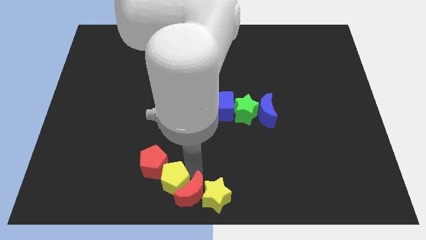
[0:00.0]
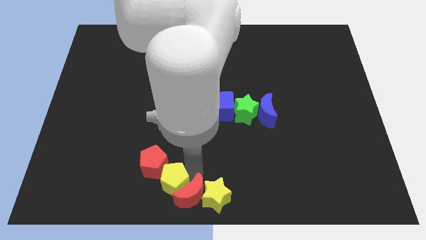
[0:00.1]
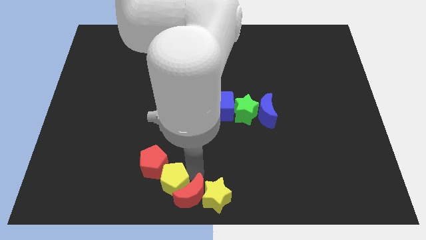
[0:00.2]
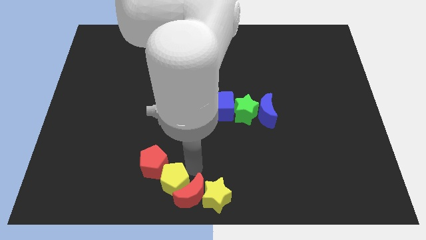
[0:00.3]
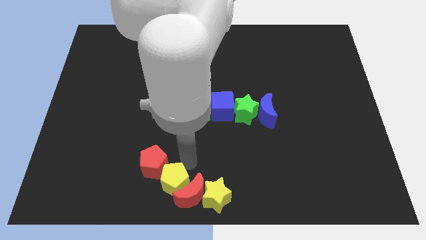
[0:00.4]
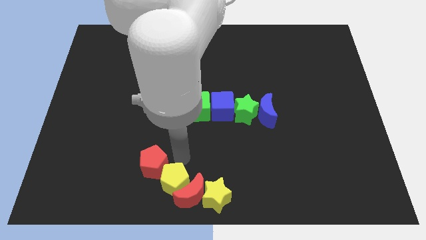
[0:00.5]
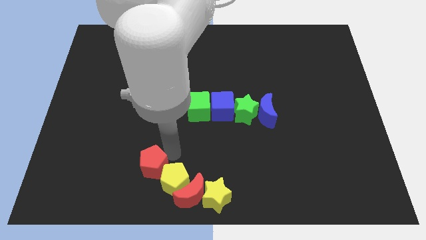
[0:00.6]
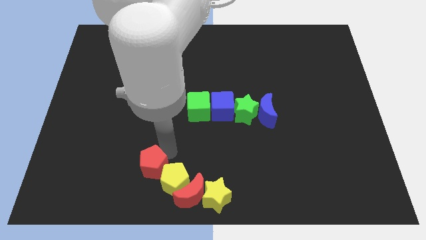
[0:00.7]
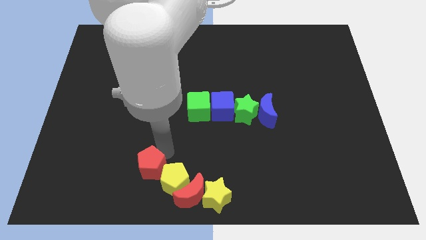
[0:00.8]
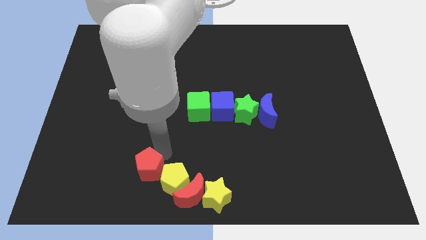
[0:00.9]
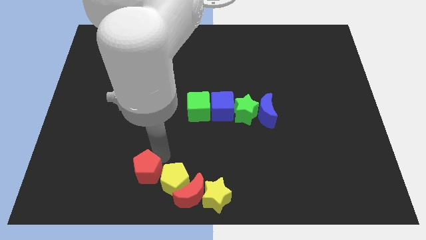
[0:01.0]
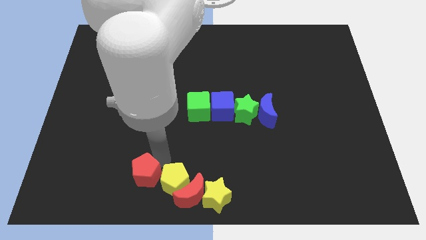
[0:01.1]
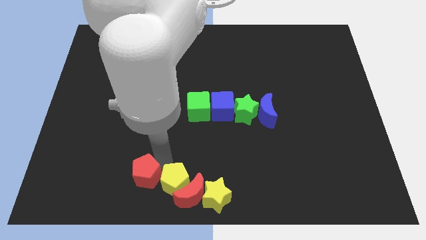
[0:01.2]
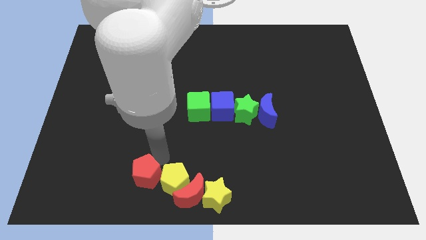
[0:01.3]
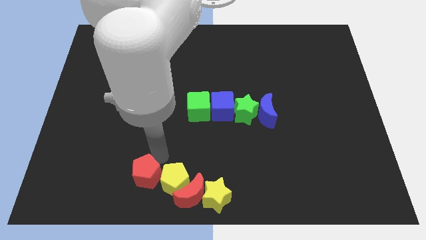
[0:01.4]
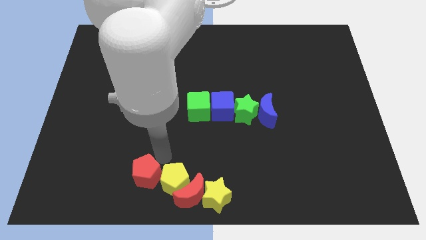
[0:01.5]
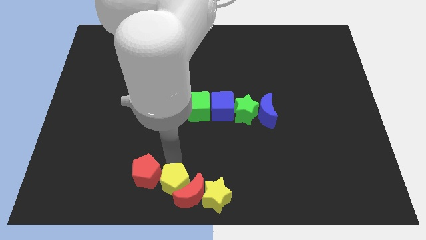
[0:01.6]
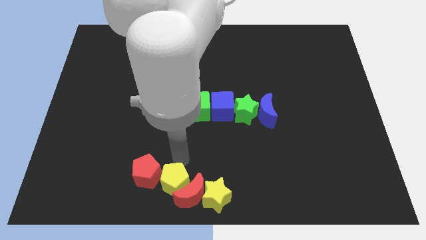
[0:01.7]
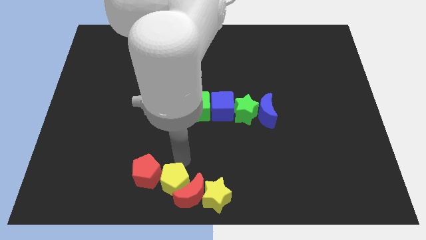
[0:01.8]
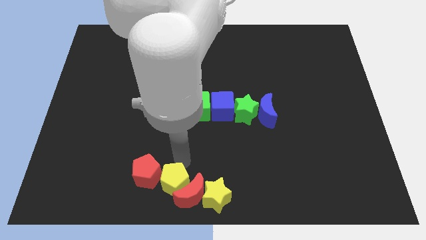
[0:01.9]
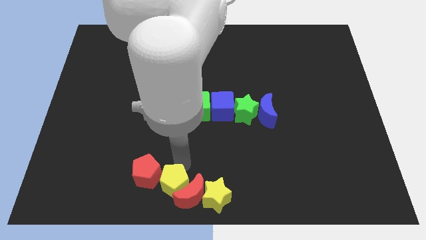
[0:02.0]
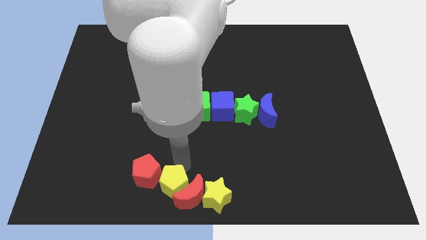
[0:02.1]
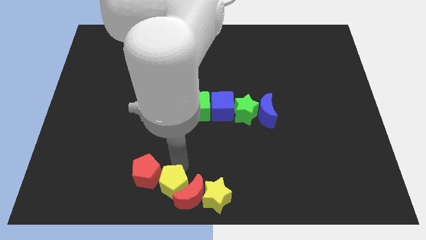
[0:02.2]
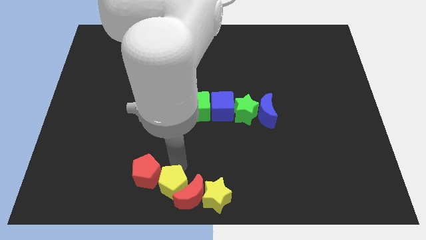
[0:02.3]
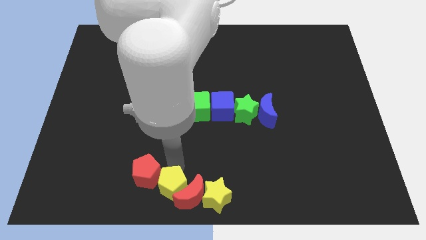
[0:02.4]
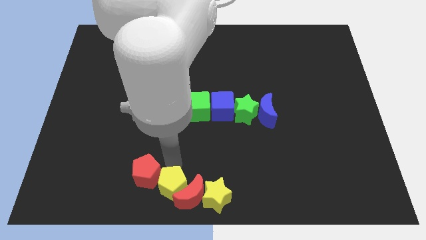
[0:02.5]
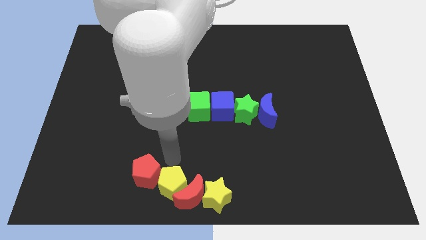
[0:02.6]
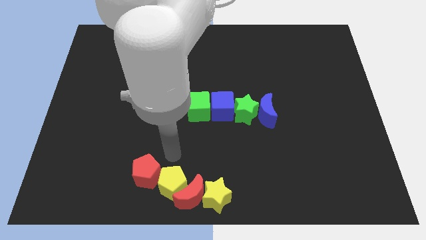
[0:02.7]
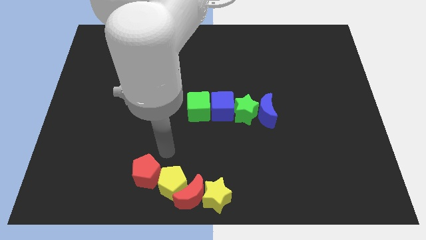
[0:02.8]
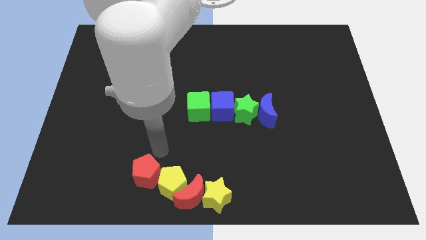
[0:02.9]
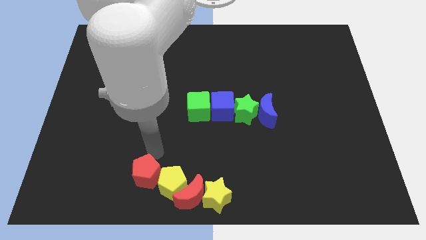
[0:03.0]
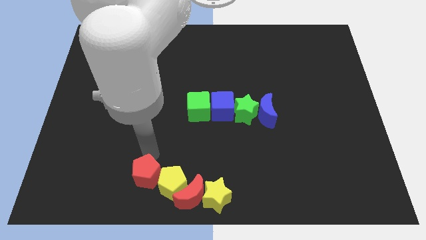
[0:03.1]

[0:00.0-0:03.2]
place the green star close to blue crescent

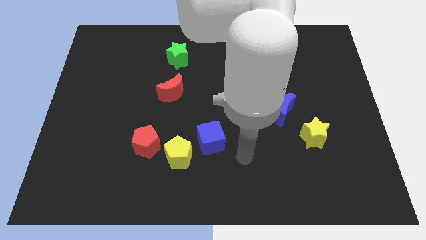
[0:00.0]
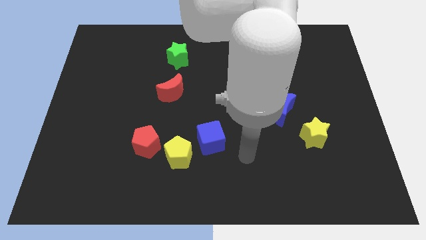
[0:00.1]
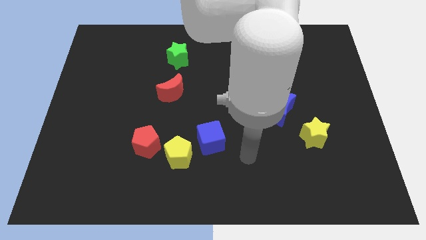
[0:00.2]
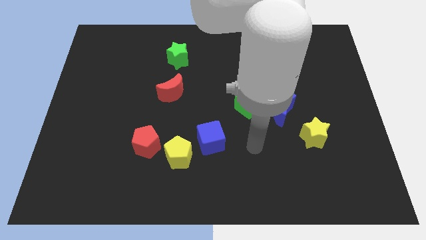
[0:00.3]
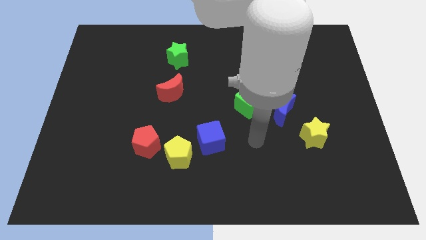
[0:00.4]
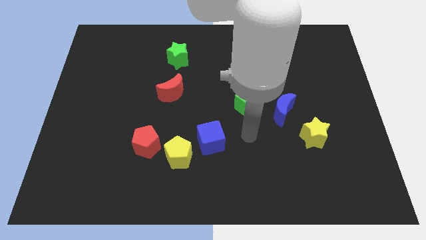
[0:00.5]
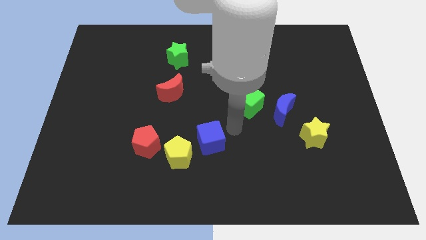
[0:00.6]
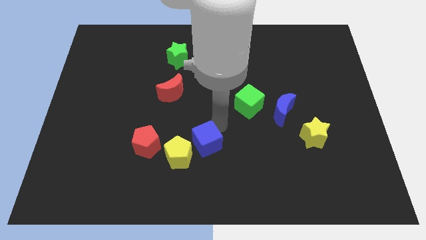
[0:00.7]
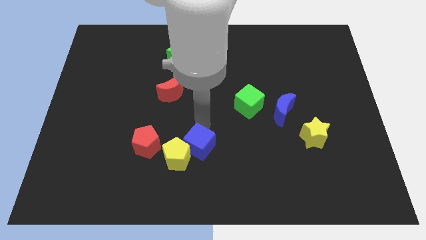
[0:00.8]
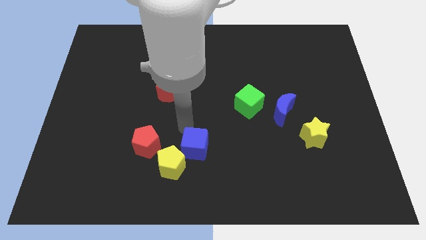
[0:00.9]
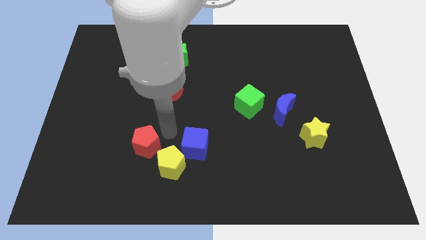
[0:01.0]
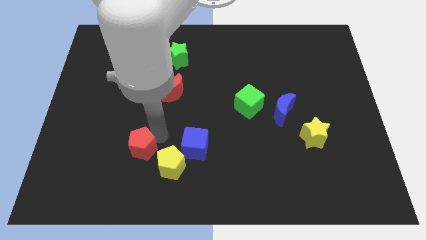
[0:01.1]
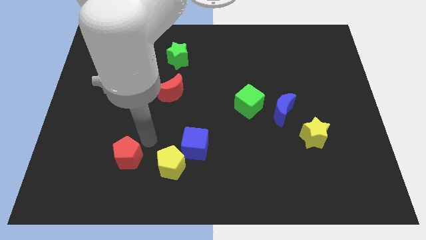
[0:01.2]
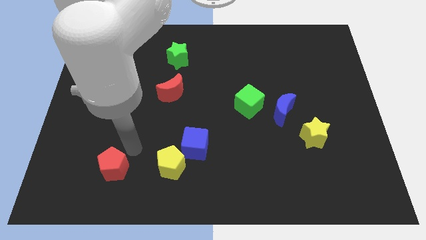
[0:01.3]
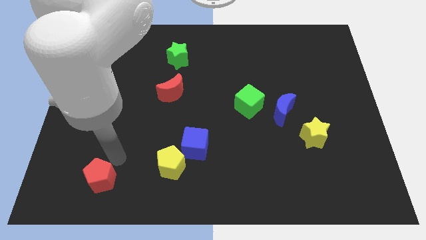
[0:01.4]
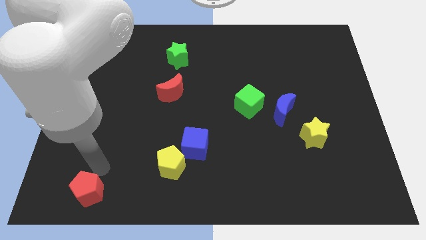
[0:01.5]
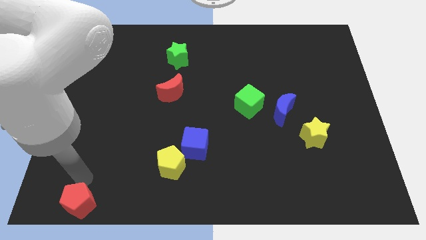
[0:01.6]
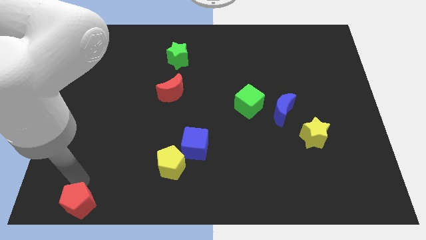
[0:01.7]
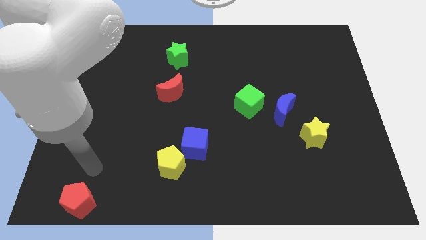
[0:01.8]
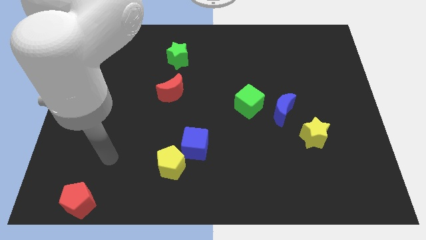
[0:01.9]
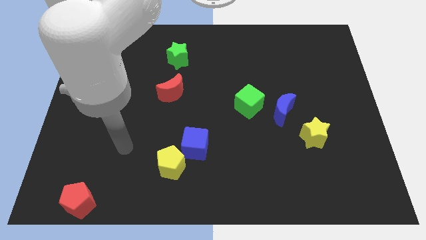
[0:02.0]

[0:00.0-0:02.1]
push red pentagon towards bottom left corner of the board

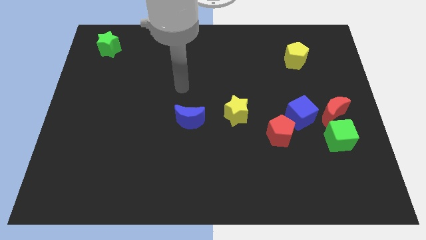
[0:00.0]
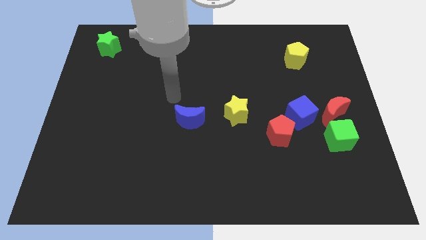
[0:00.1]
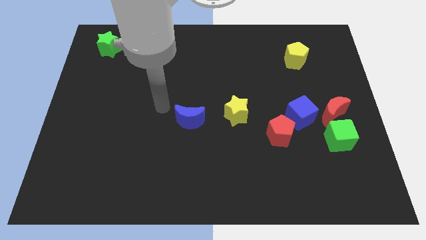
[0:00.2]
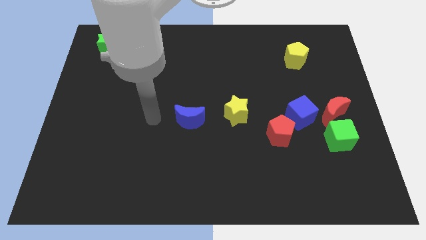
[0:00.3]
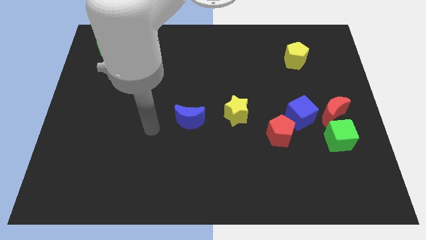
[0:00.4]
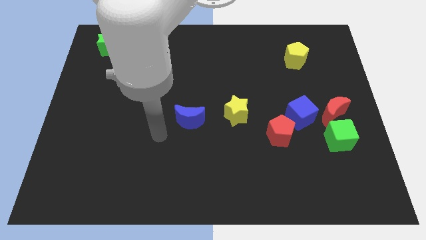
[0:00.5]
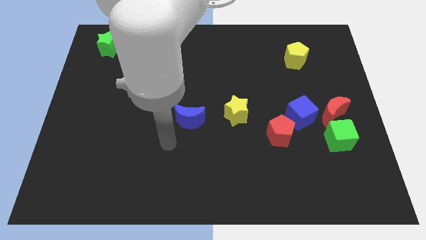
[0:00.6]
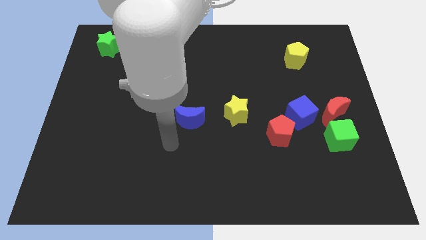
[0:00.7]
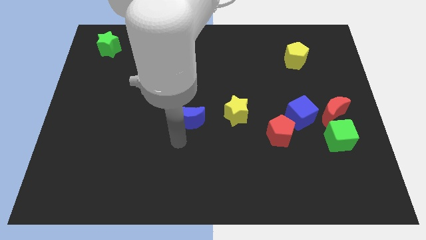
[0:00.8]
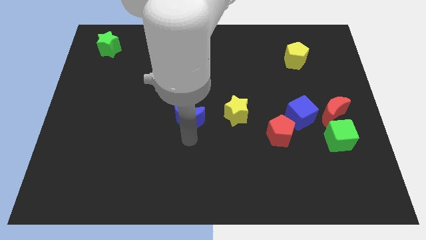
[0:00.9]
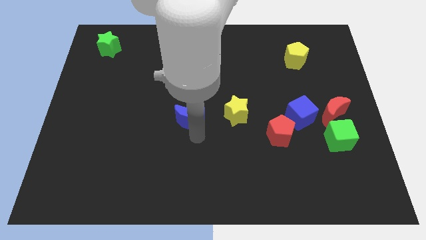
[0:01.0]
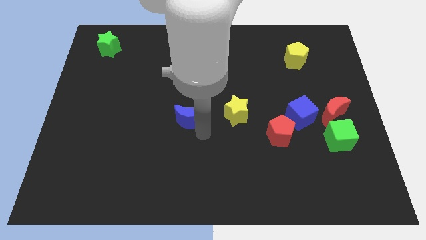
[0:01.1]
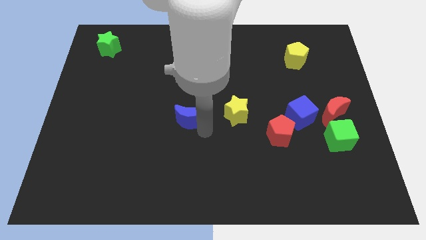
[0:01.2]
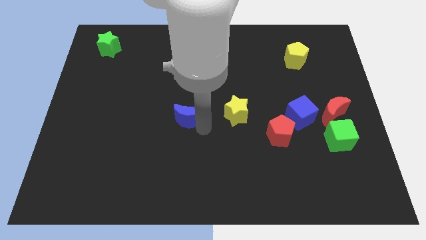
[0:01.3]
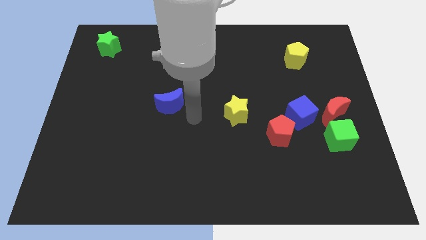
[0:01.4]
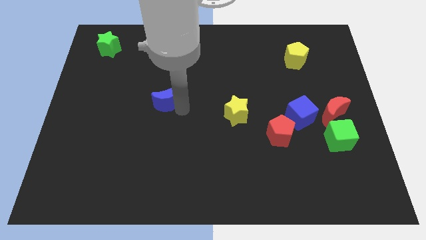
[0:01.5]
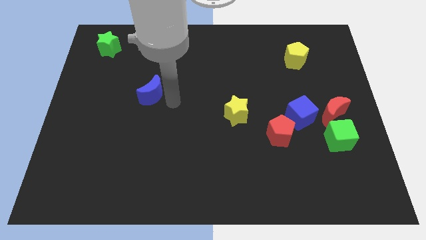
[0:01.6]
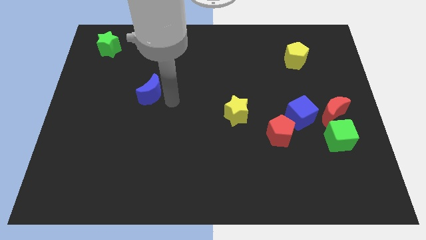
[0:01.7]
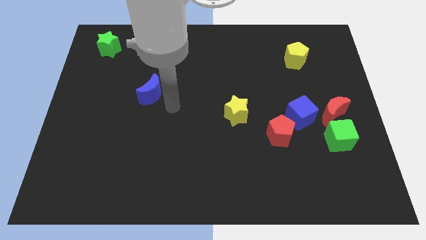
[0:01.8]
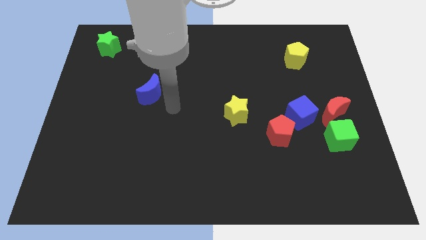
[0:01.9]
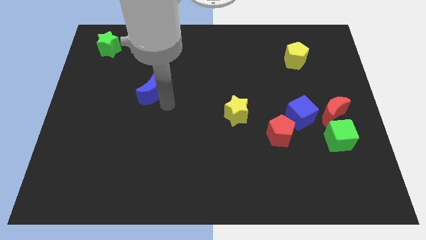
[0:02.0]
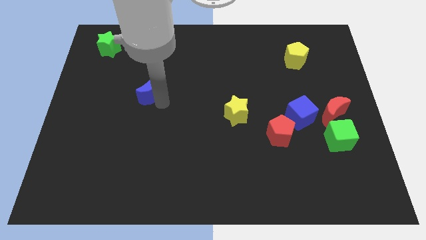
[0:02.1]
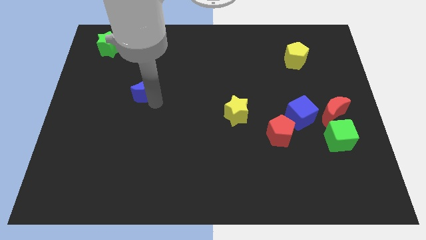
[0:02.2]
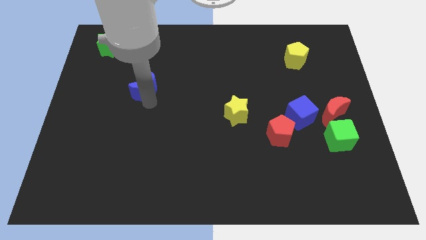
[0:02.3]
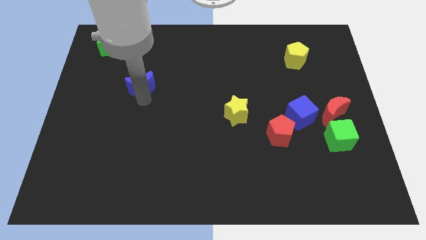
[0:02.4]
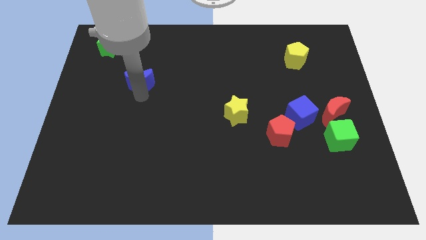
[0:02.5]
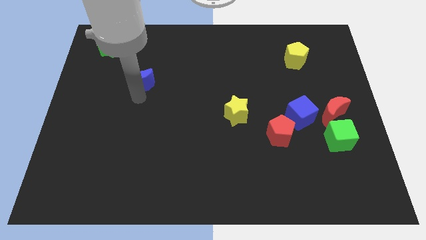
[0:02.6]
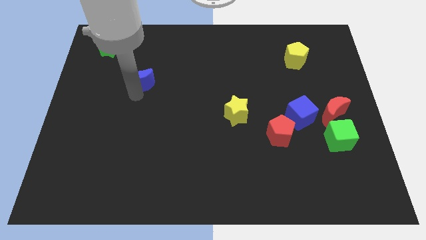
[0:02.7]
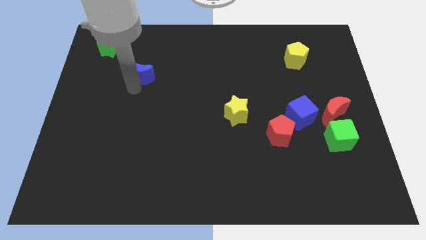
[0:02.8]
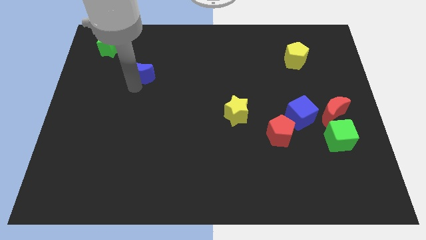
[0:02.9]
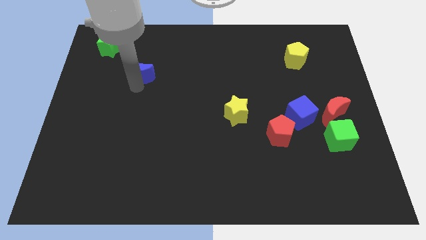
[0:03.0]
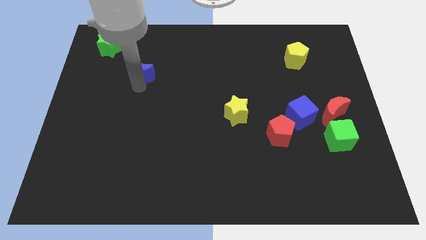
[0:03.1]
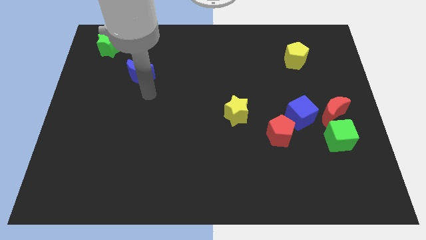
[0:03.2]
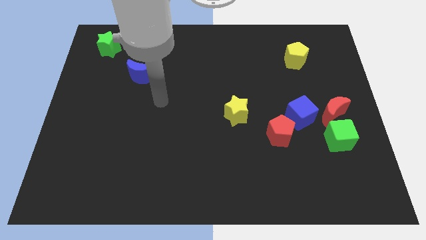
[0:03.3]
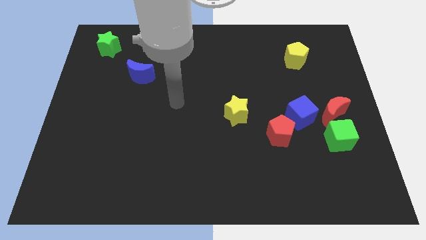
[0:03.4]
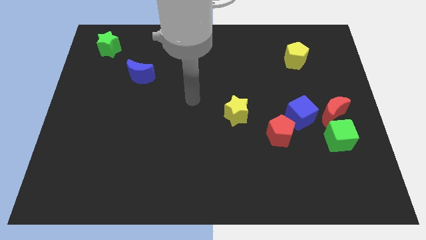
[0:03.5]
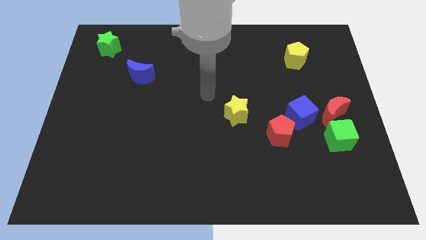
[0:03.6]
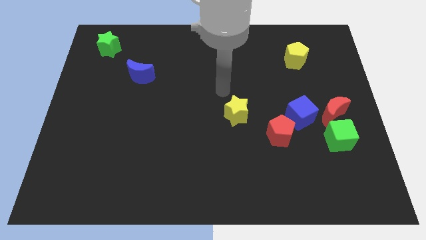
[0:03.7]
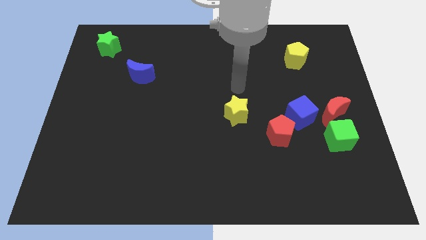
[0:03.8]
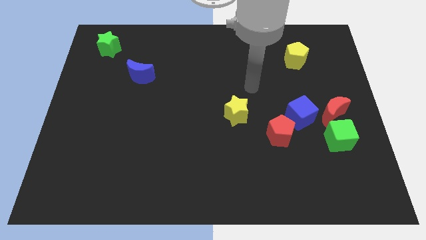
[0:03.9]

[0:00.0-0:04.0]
place the blue moon diagonally top left to yellow star
